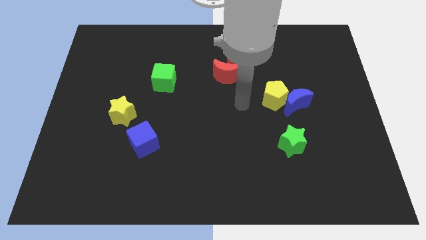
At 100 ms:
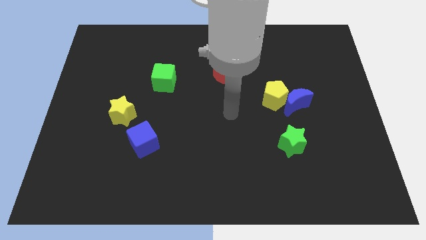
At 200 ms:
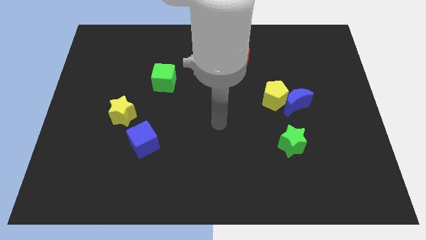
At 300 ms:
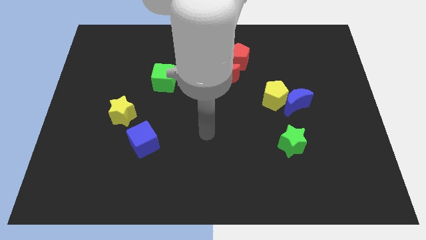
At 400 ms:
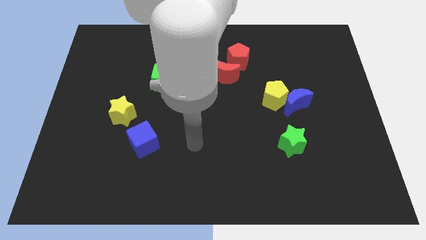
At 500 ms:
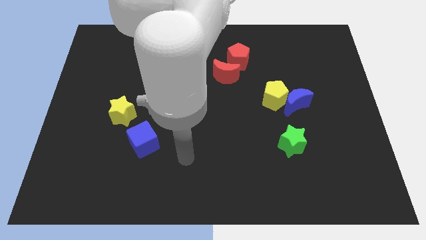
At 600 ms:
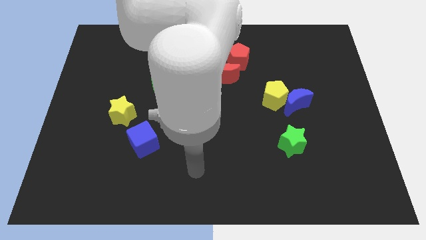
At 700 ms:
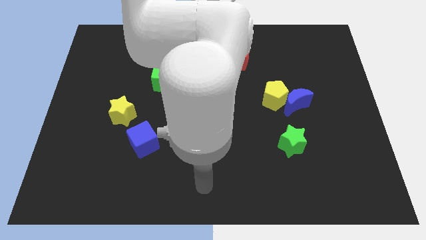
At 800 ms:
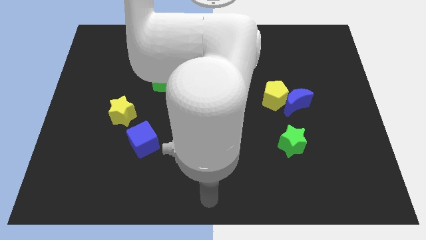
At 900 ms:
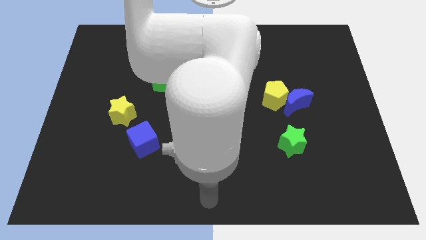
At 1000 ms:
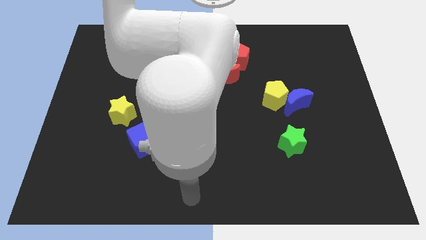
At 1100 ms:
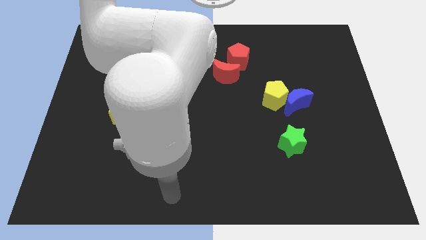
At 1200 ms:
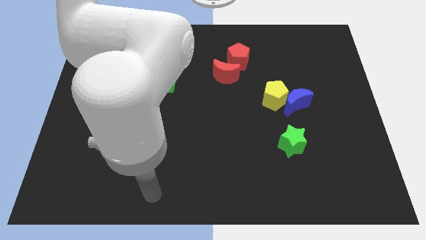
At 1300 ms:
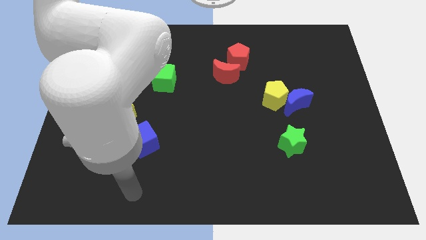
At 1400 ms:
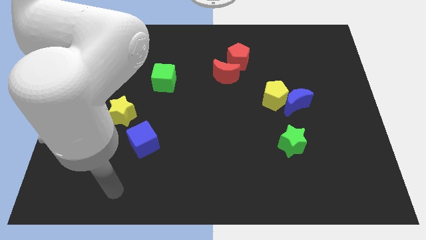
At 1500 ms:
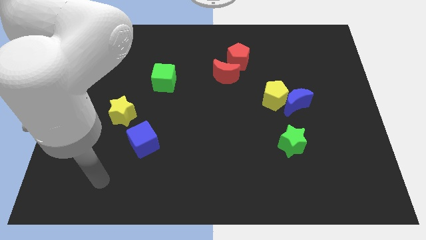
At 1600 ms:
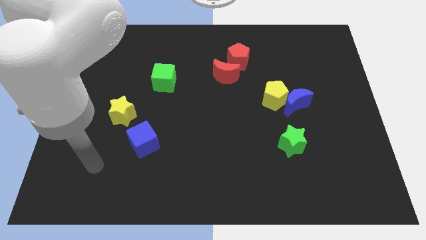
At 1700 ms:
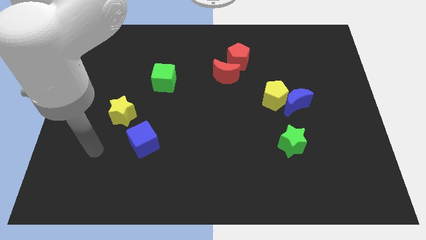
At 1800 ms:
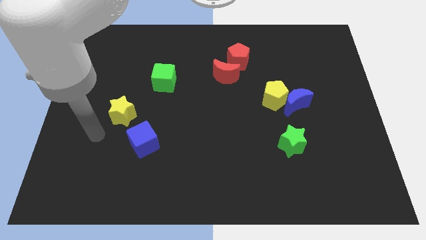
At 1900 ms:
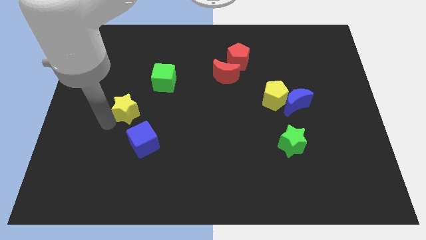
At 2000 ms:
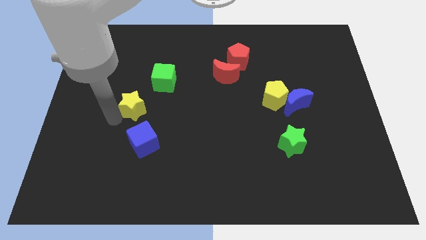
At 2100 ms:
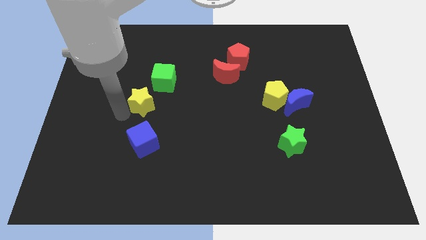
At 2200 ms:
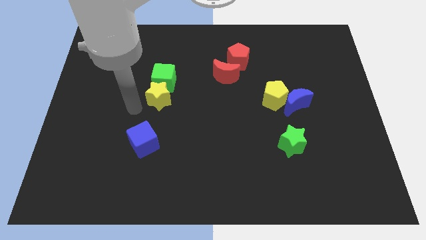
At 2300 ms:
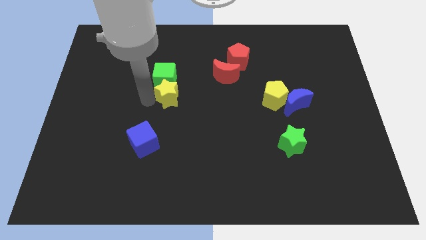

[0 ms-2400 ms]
place the yellow star below the green cube

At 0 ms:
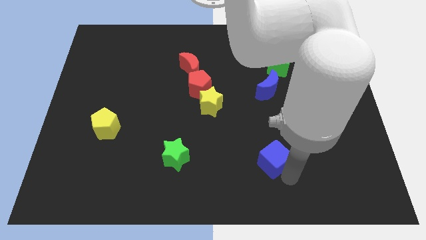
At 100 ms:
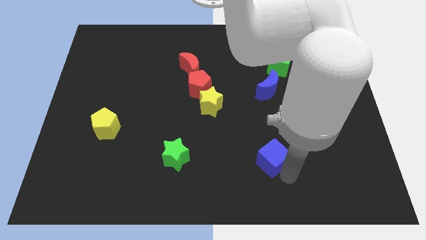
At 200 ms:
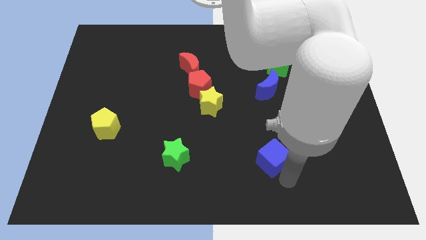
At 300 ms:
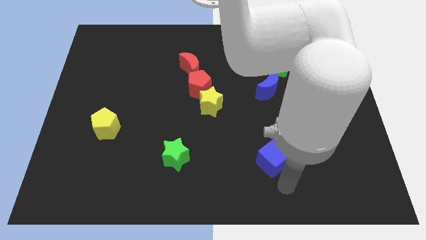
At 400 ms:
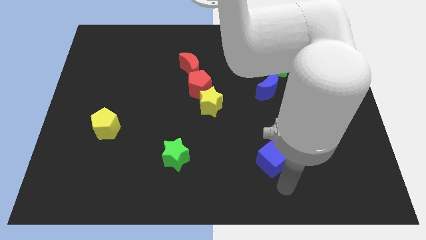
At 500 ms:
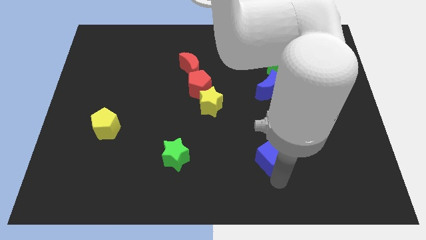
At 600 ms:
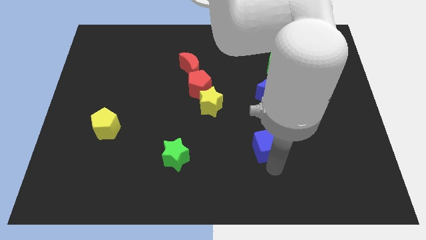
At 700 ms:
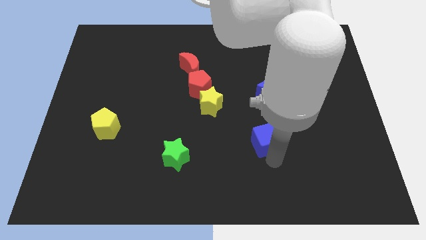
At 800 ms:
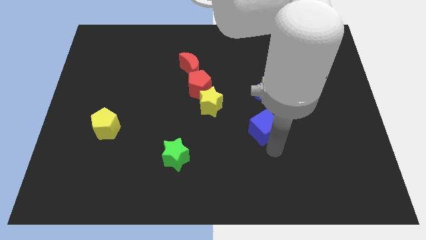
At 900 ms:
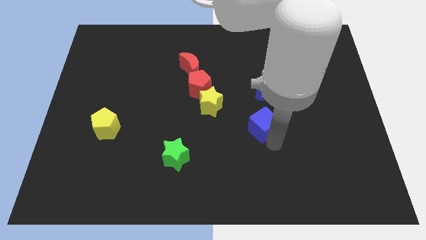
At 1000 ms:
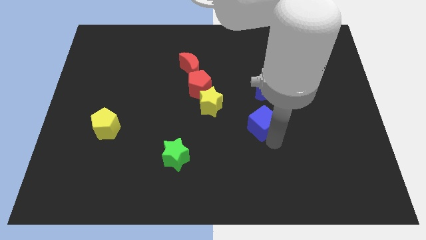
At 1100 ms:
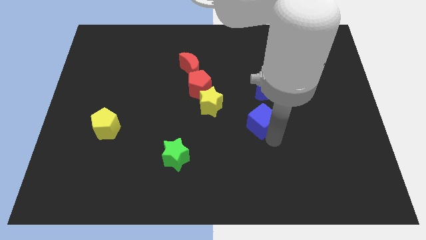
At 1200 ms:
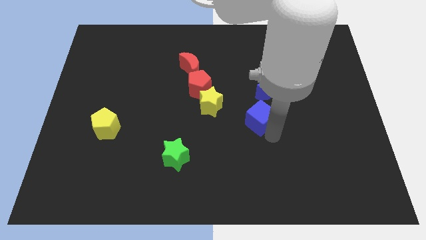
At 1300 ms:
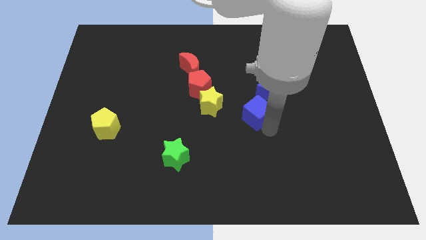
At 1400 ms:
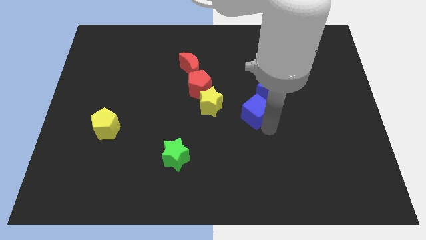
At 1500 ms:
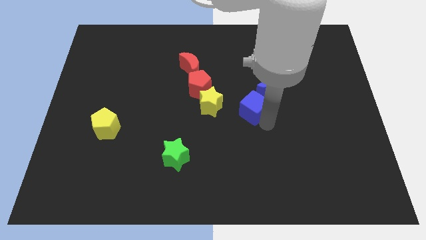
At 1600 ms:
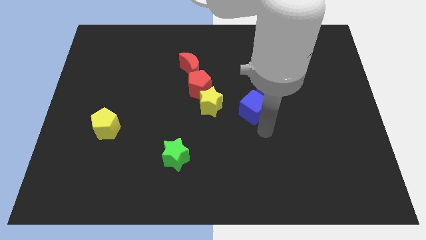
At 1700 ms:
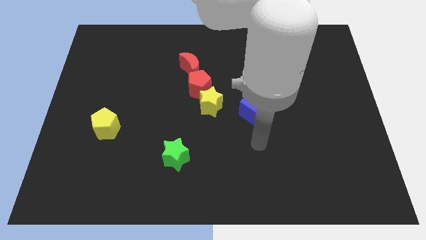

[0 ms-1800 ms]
move blue cube into the blue moon

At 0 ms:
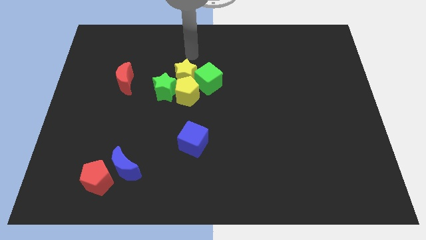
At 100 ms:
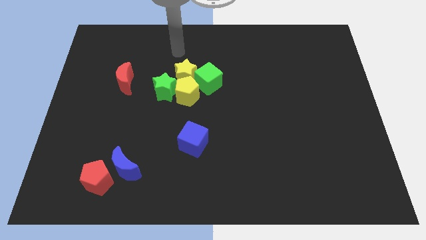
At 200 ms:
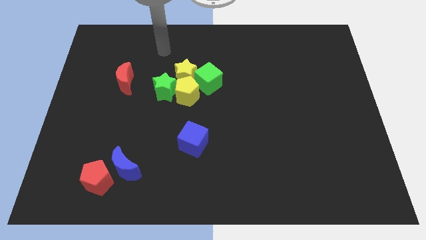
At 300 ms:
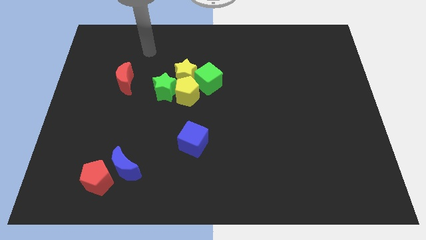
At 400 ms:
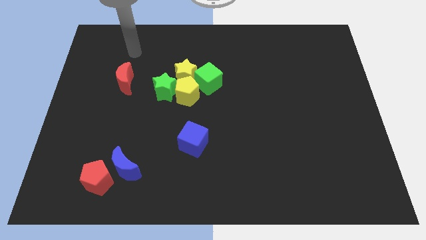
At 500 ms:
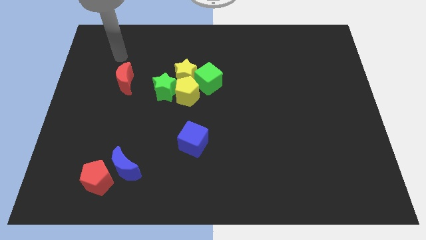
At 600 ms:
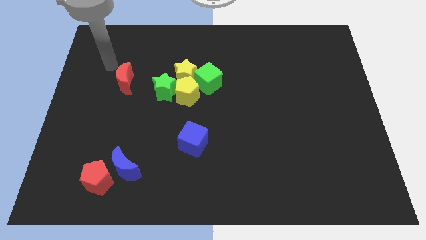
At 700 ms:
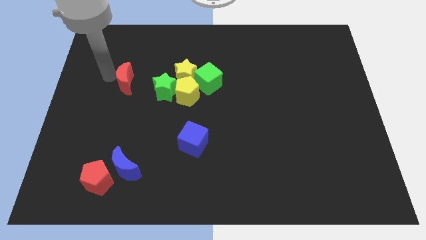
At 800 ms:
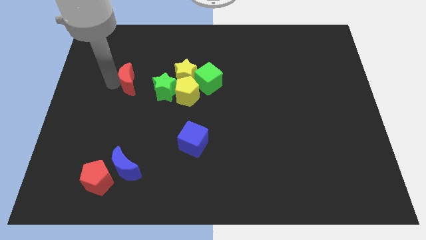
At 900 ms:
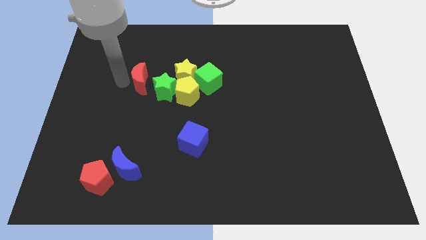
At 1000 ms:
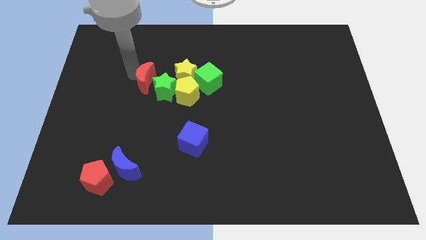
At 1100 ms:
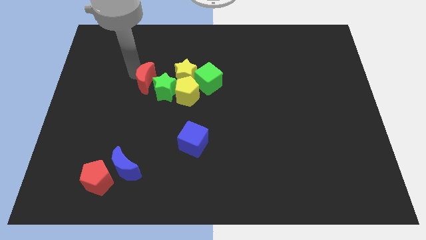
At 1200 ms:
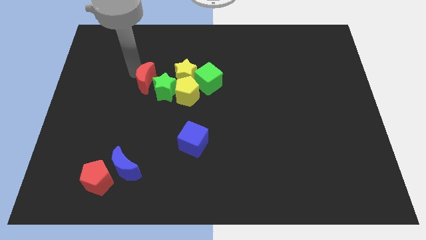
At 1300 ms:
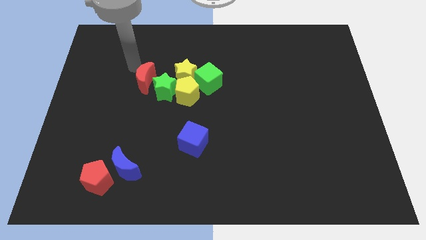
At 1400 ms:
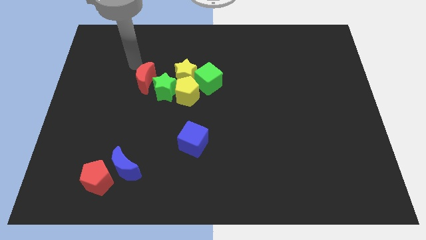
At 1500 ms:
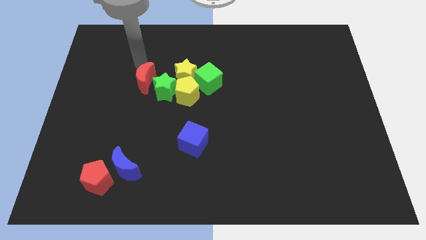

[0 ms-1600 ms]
push the red moon close to the green star

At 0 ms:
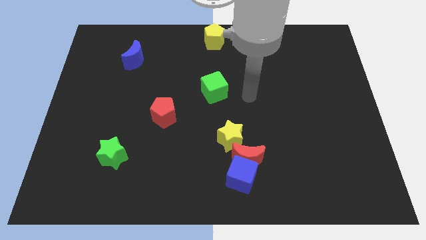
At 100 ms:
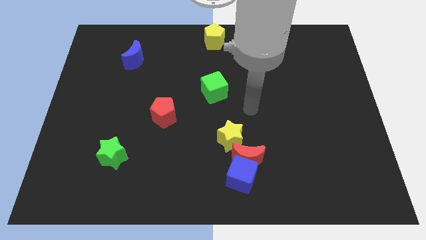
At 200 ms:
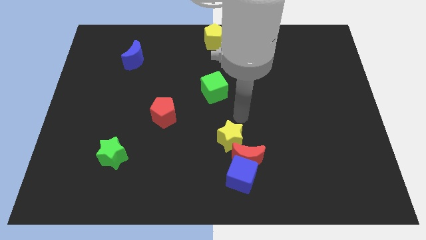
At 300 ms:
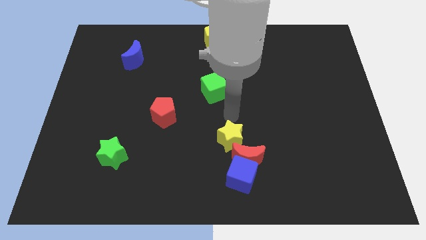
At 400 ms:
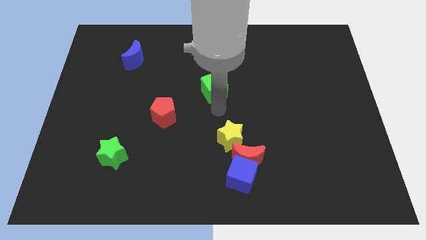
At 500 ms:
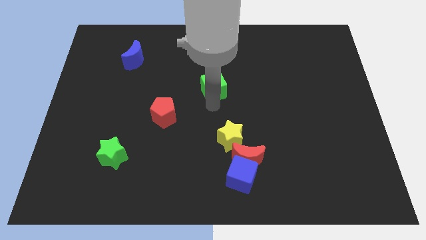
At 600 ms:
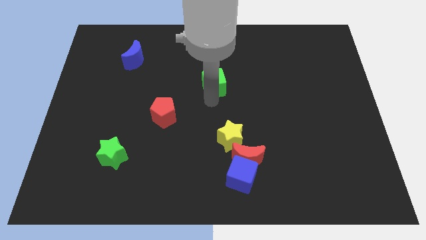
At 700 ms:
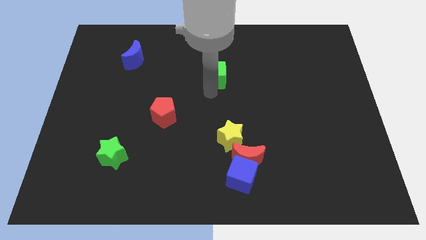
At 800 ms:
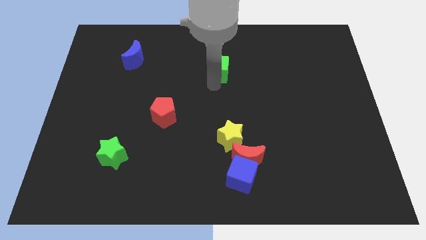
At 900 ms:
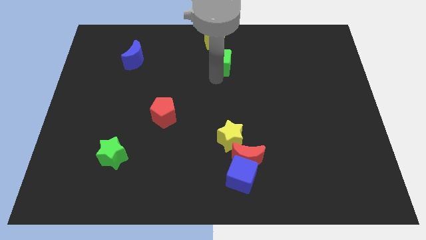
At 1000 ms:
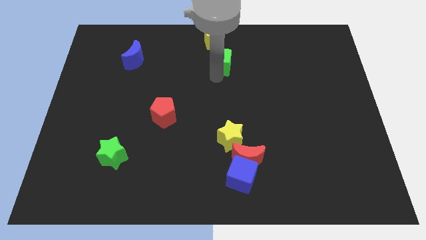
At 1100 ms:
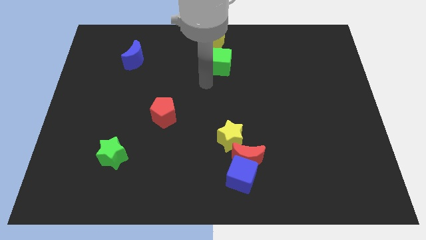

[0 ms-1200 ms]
place the green cube down to the yellow pentagon

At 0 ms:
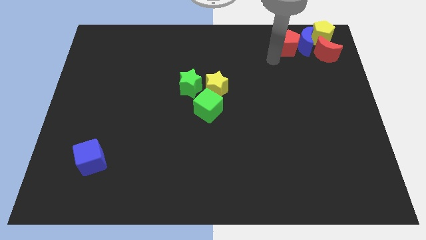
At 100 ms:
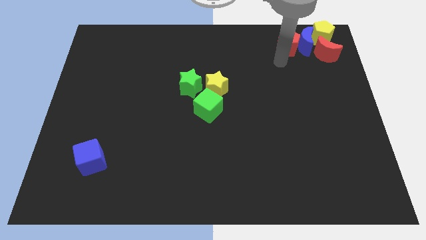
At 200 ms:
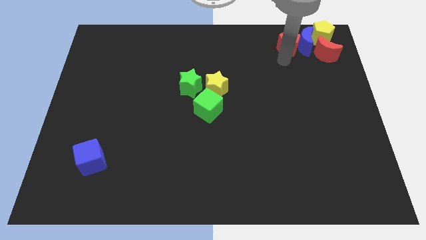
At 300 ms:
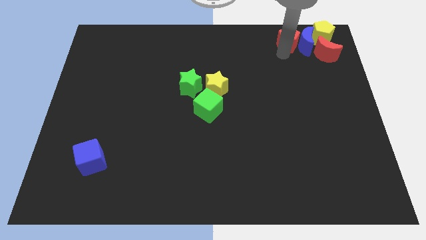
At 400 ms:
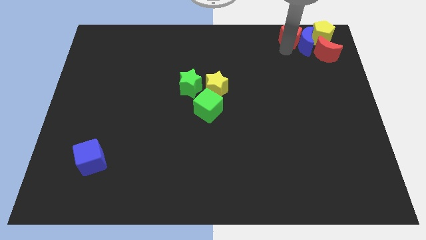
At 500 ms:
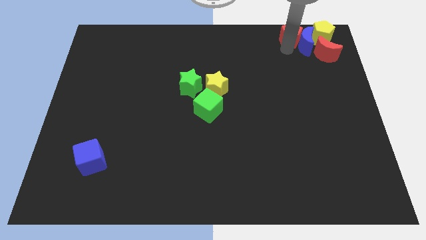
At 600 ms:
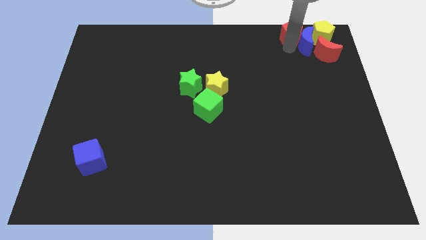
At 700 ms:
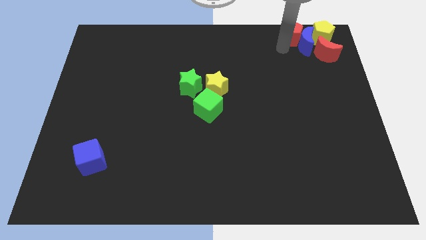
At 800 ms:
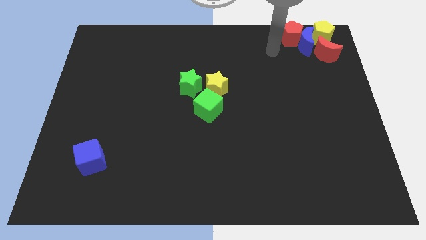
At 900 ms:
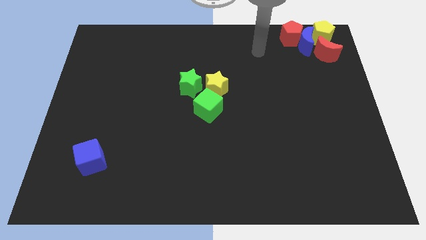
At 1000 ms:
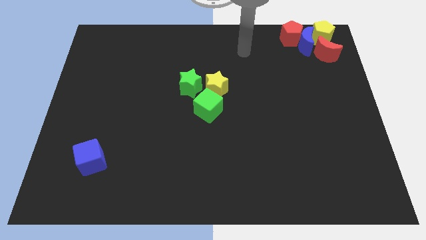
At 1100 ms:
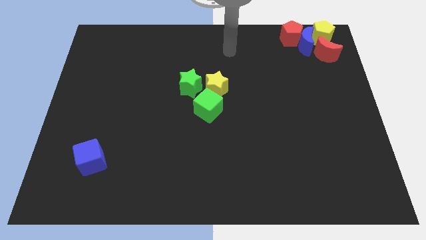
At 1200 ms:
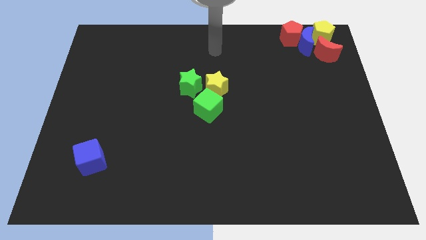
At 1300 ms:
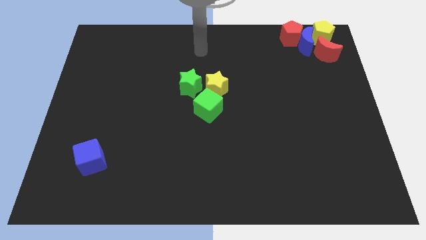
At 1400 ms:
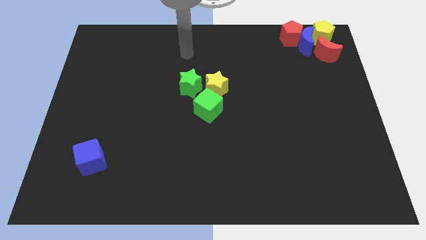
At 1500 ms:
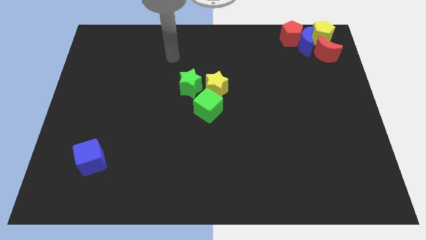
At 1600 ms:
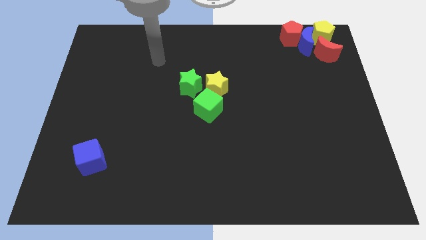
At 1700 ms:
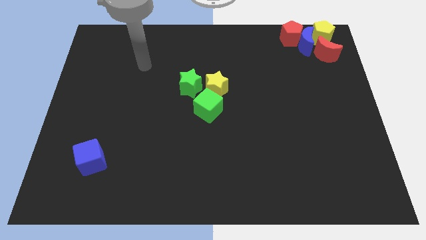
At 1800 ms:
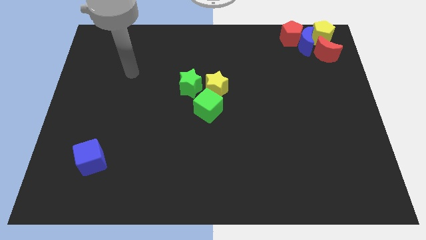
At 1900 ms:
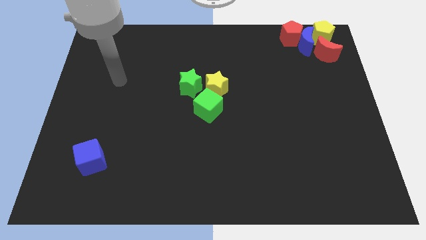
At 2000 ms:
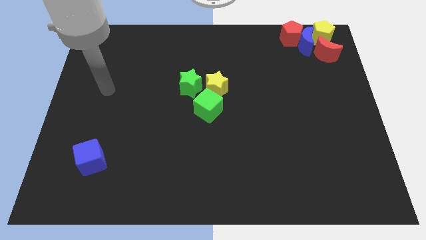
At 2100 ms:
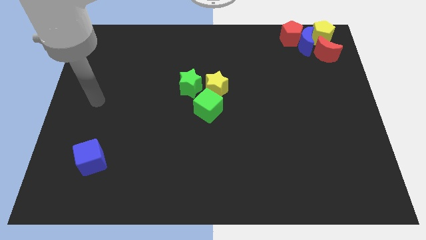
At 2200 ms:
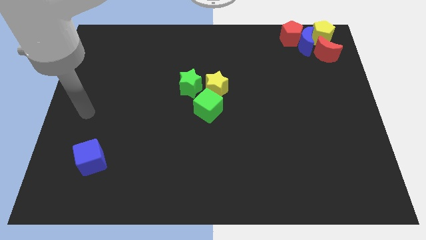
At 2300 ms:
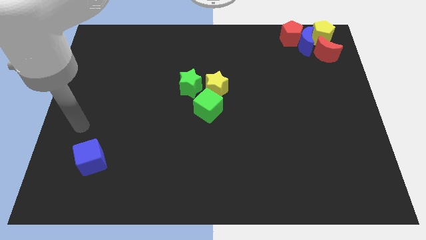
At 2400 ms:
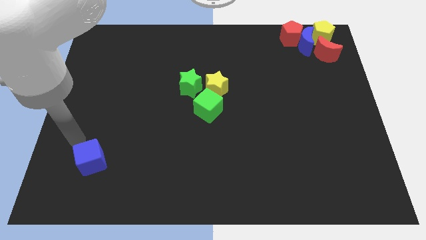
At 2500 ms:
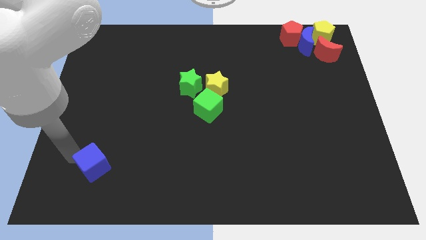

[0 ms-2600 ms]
place the arm above the blue cube
